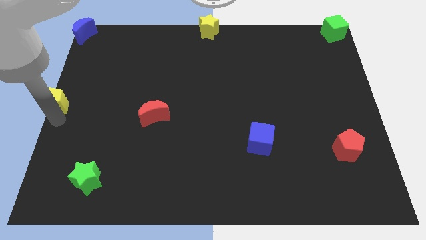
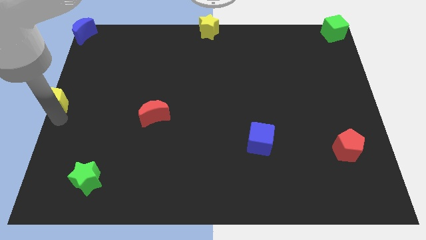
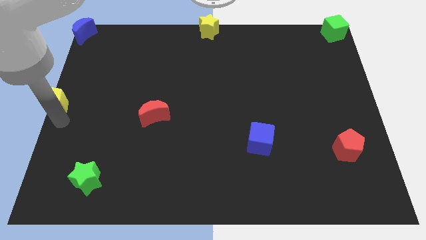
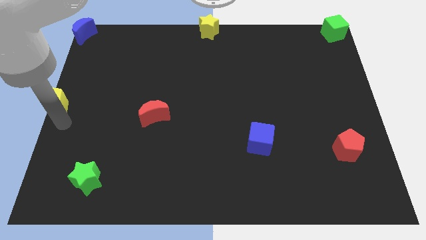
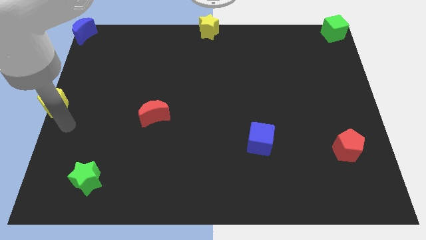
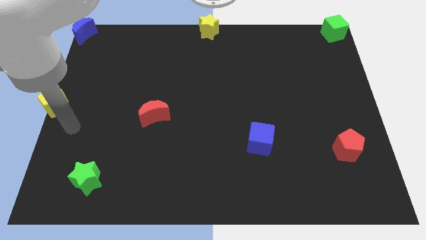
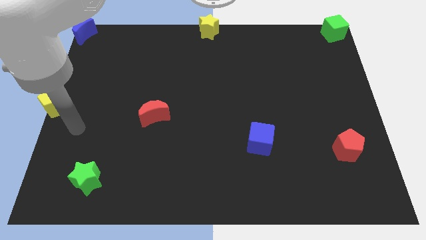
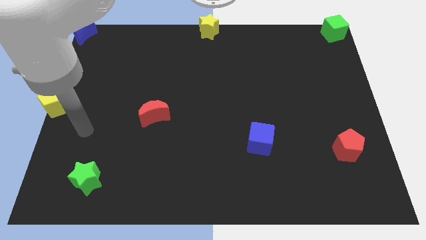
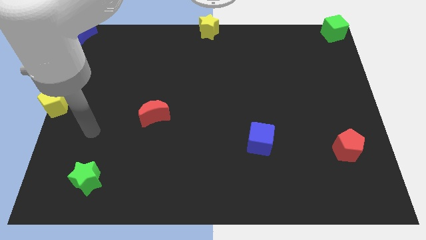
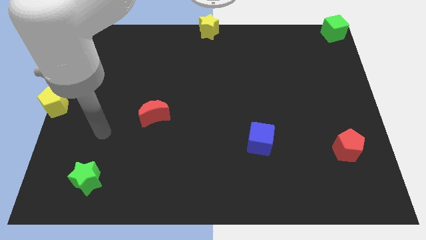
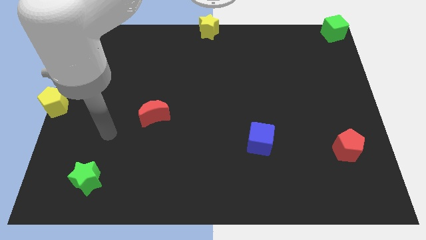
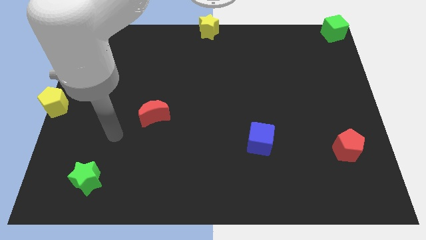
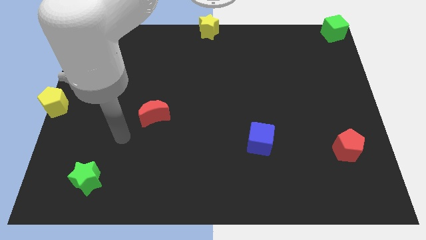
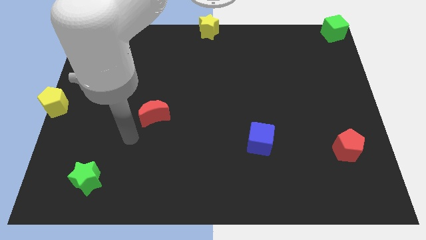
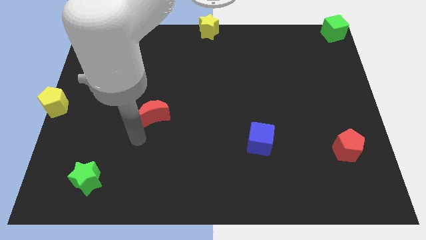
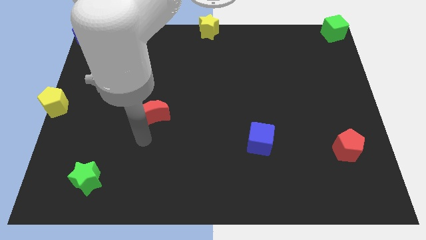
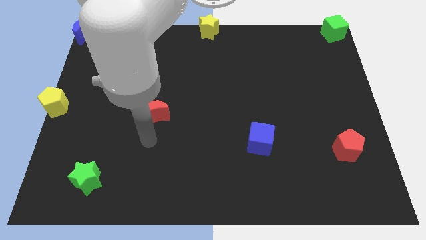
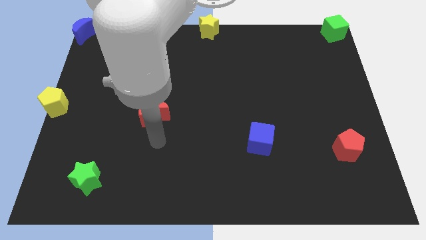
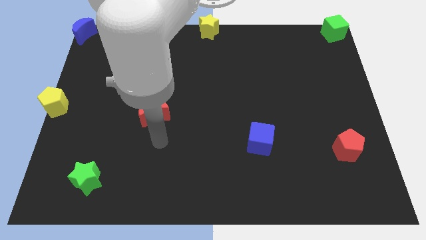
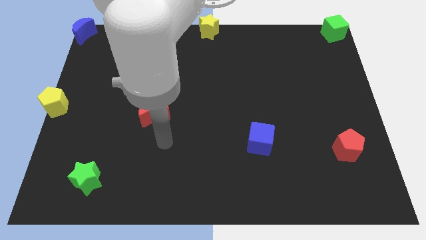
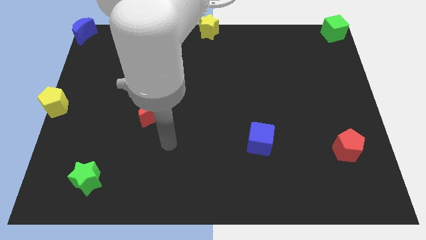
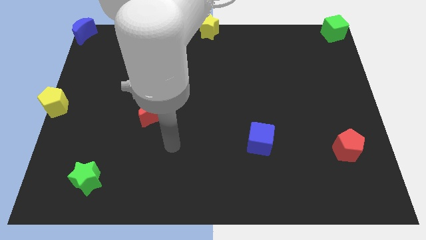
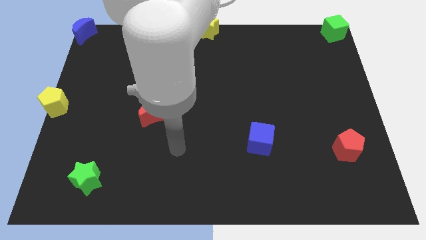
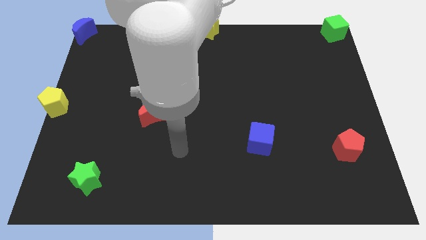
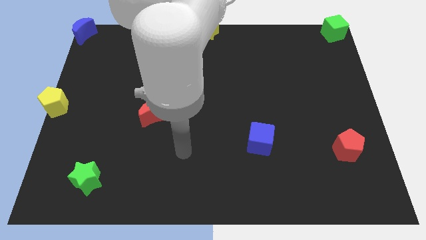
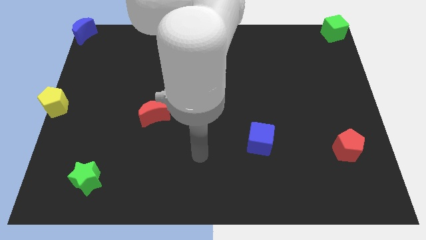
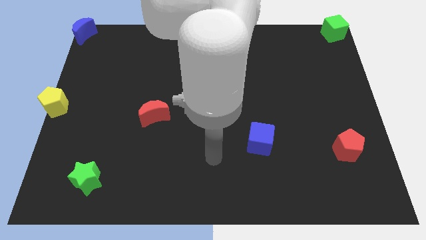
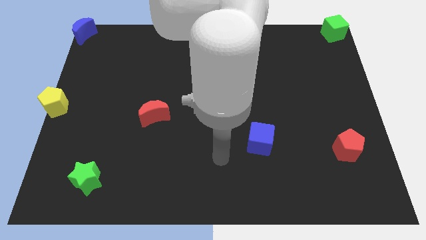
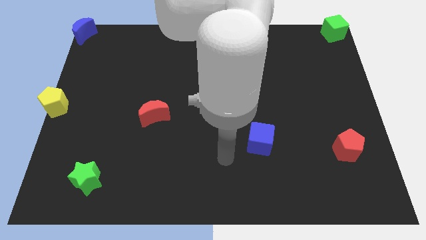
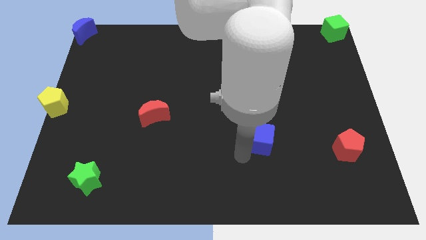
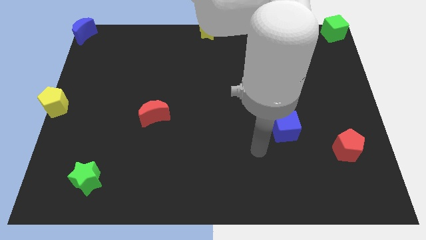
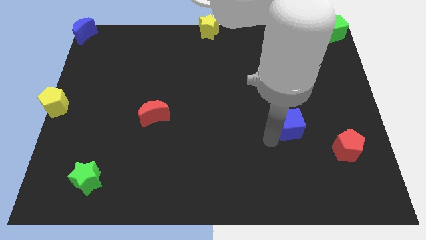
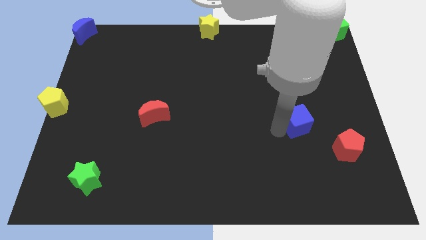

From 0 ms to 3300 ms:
move the arm away from the yellow pentagon

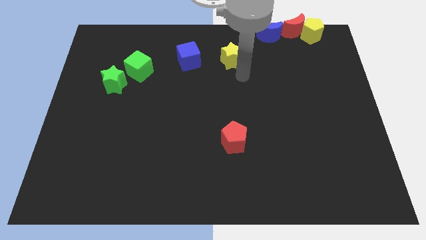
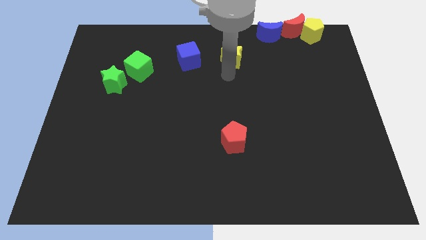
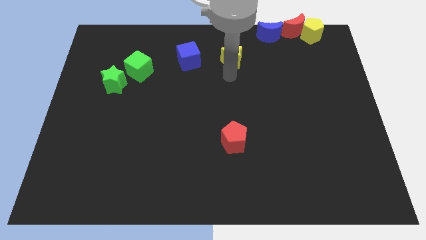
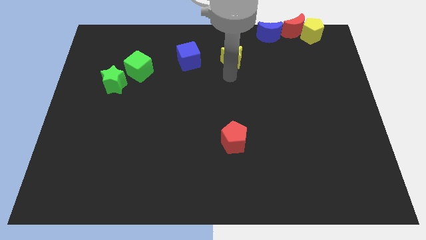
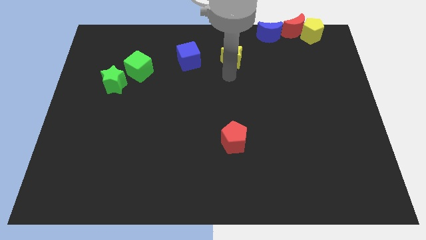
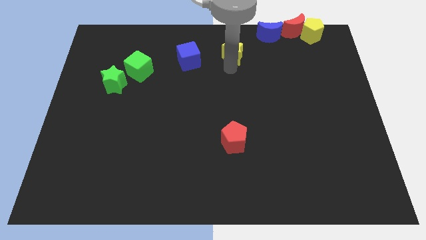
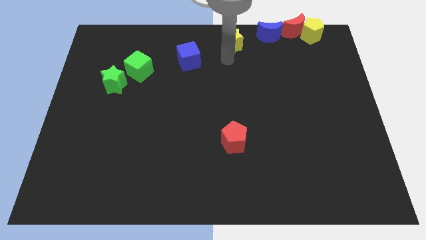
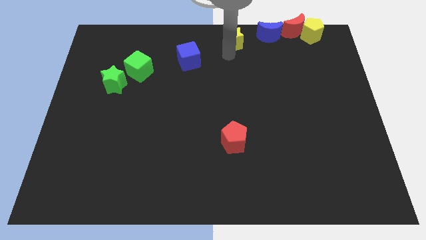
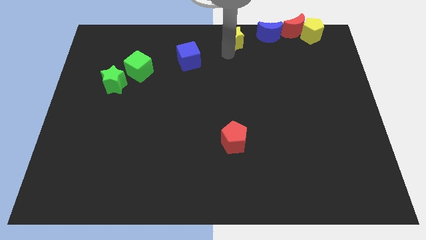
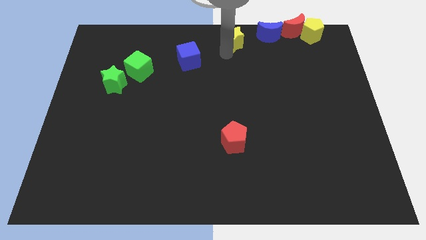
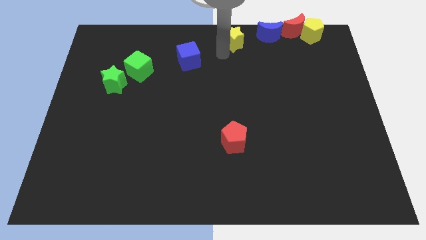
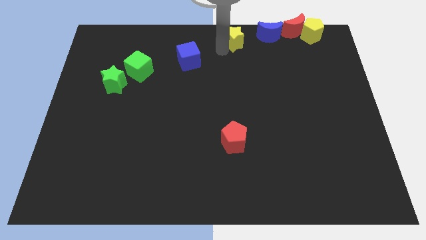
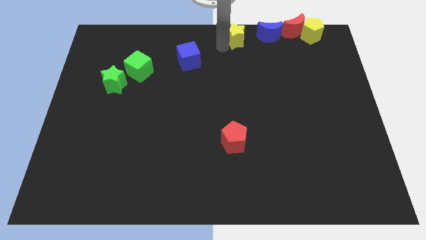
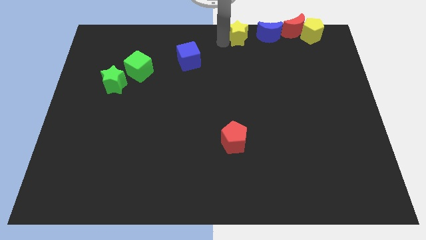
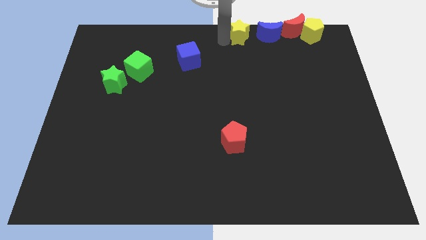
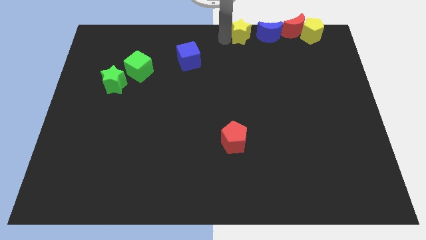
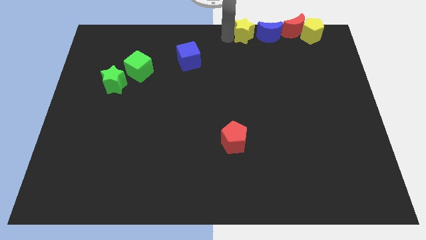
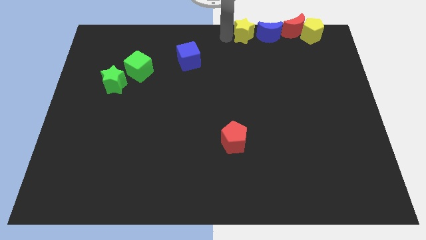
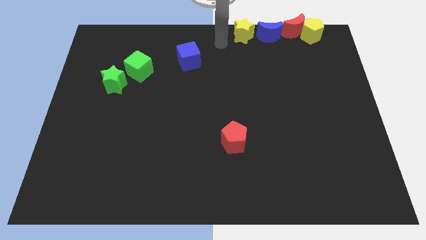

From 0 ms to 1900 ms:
place the yellow star to the left of blue moon

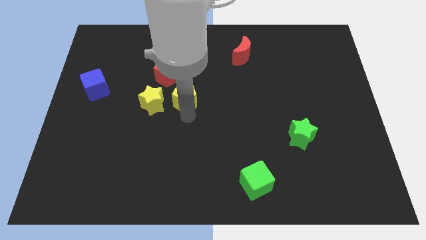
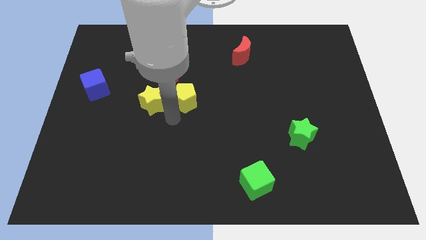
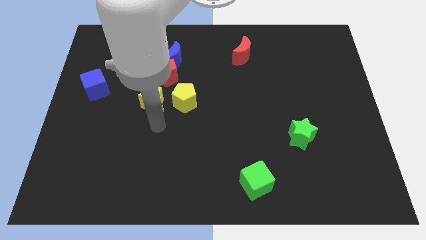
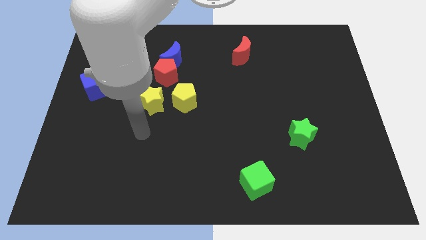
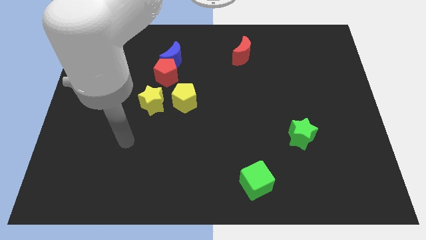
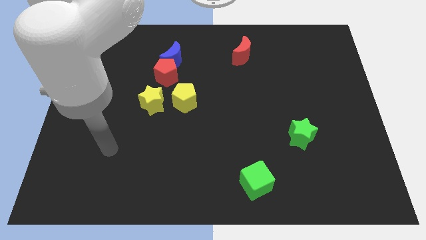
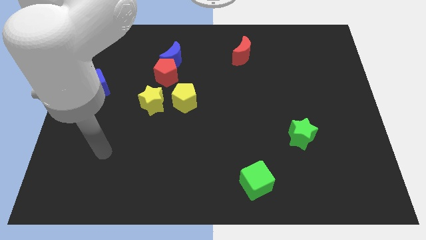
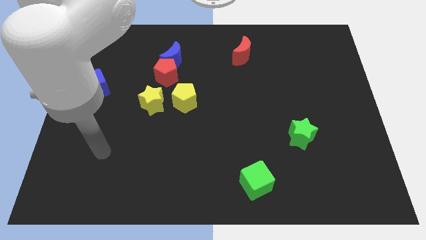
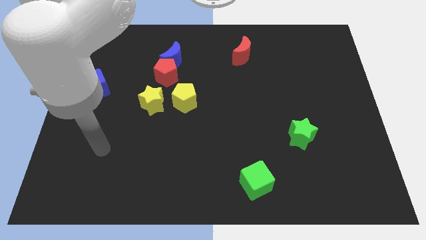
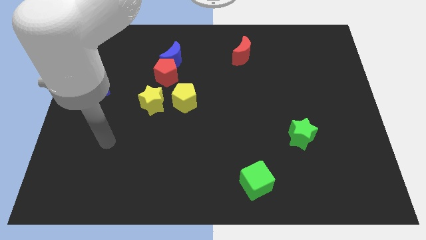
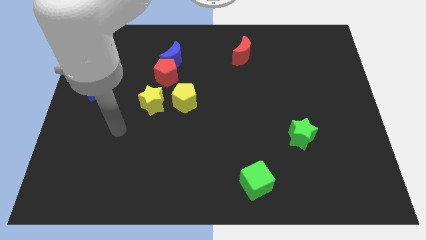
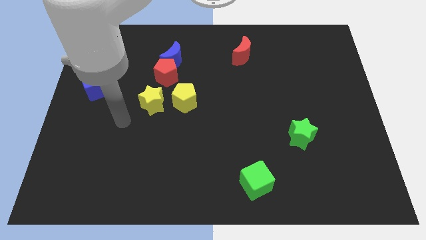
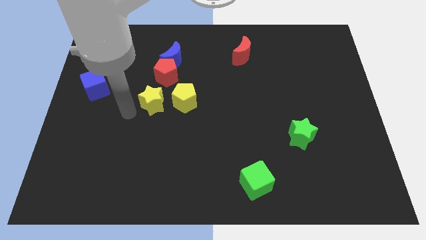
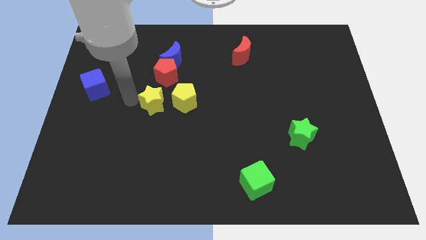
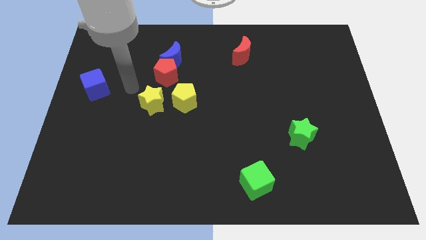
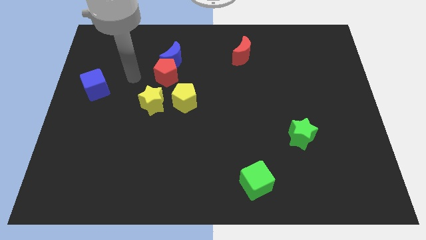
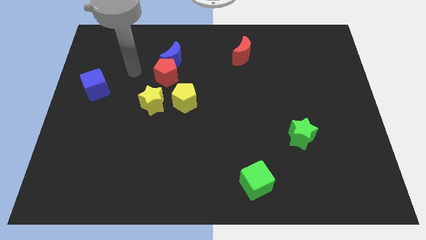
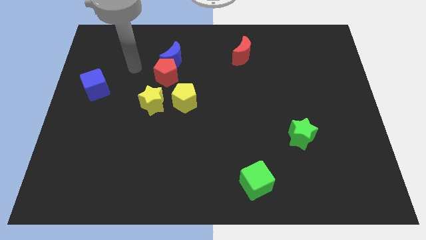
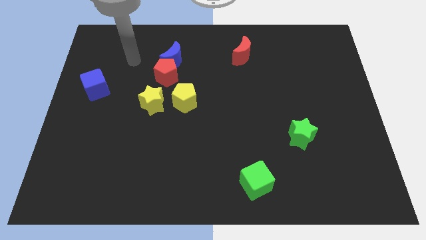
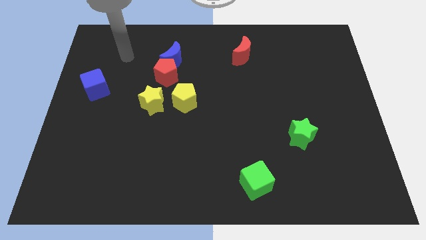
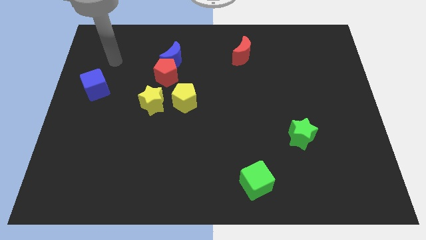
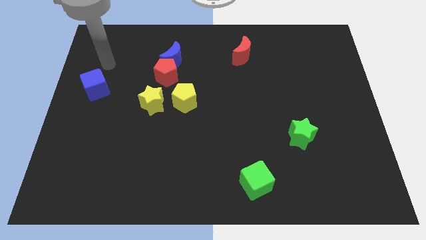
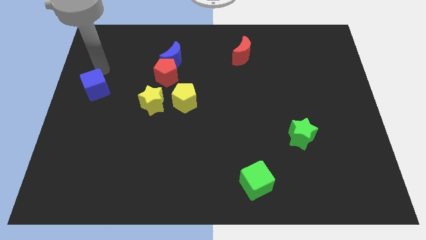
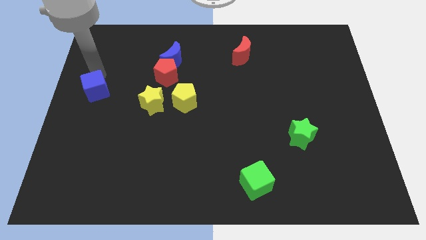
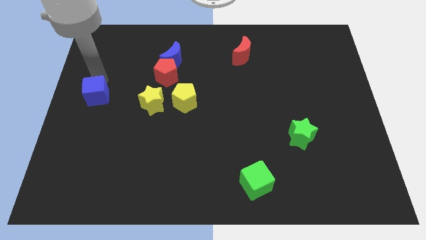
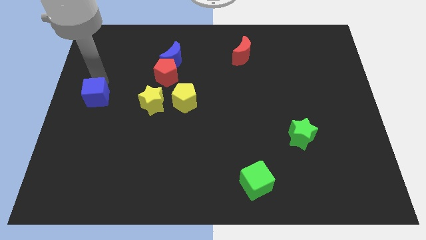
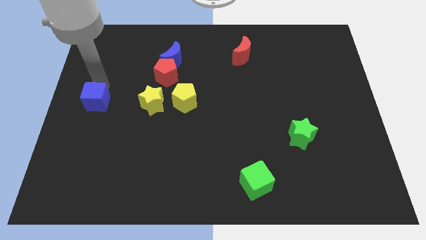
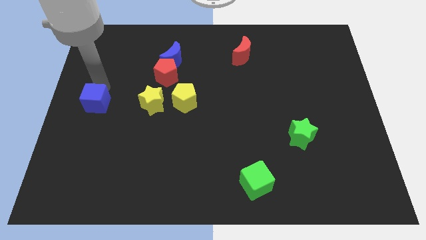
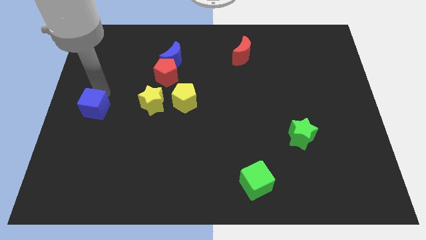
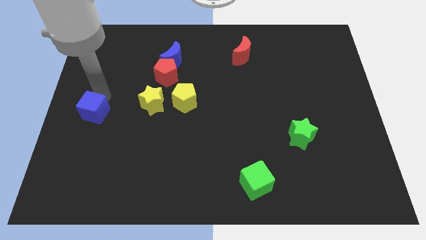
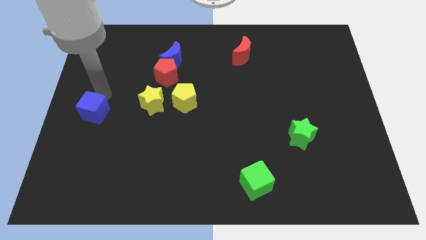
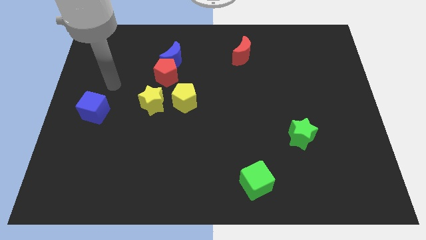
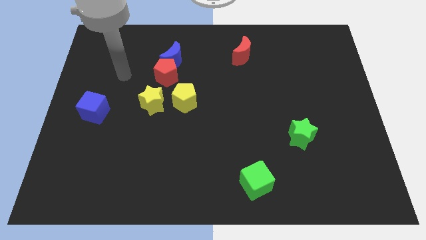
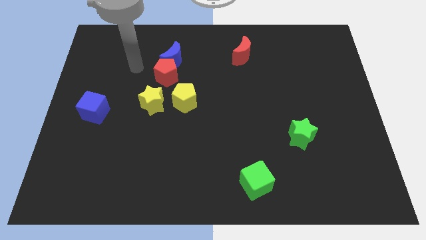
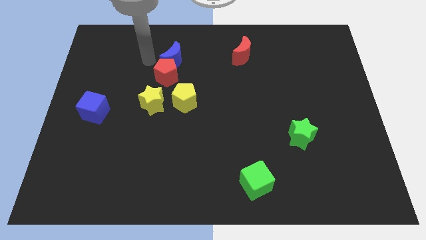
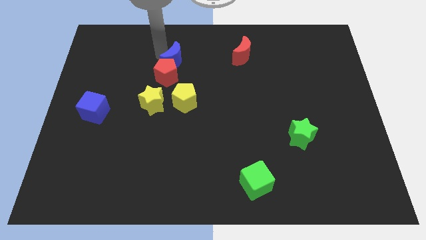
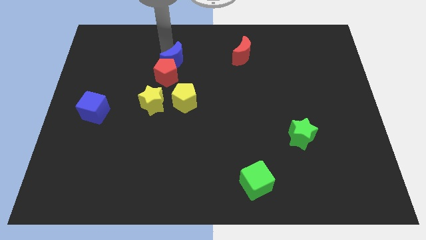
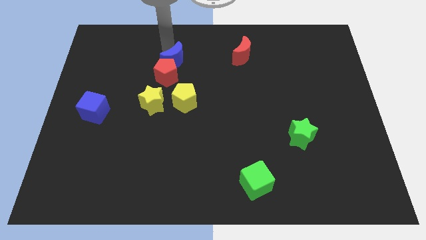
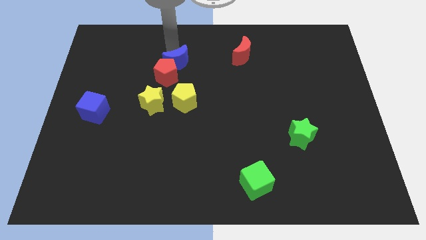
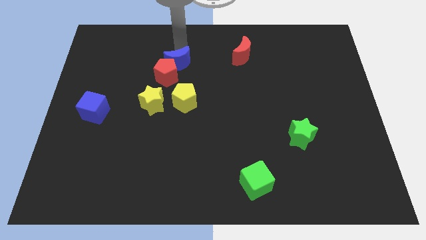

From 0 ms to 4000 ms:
move the blue cube down slightly
